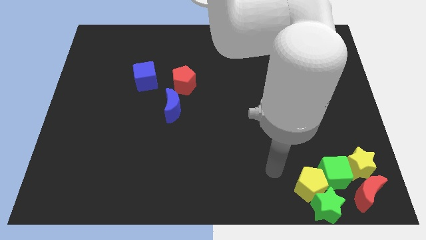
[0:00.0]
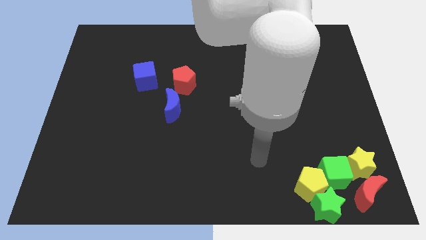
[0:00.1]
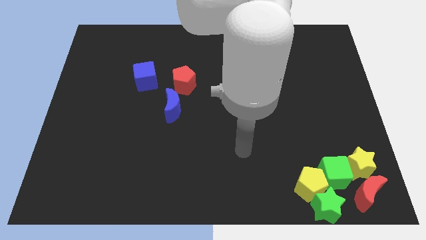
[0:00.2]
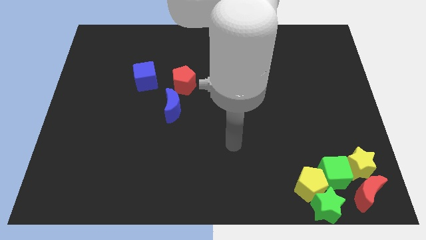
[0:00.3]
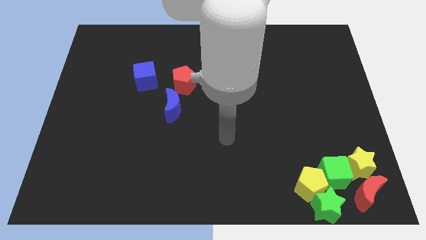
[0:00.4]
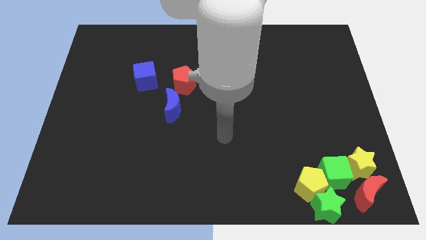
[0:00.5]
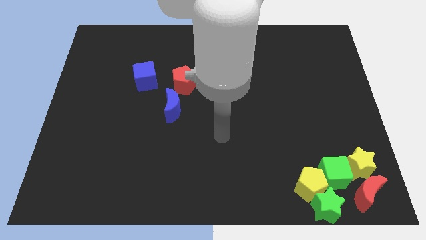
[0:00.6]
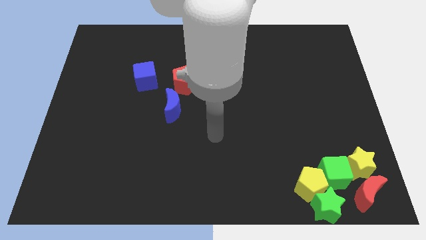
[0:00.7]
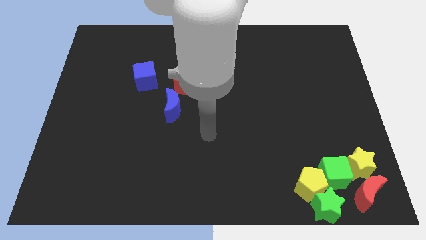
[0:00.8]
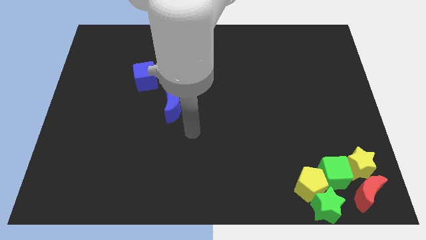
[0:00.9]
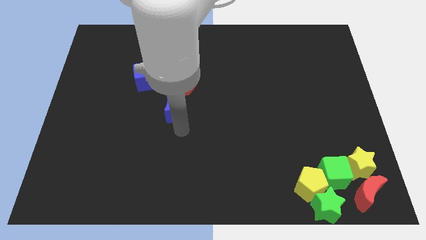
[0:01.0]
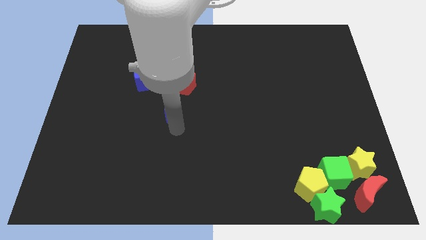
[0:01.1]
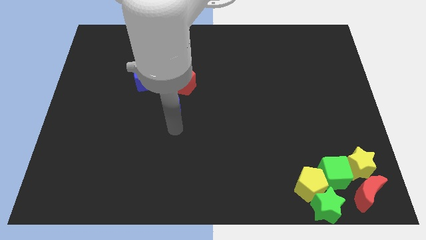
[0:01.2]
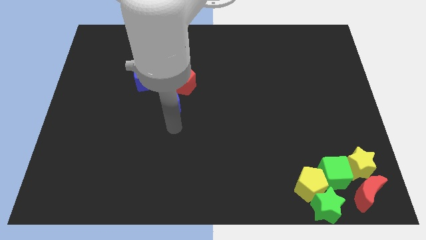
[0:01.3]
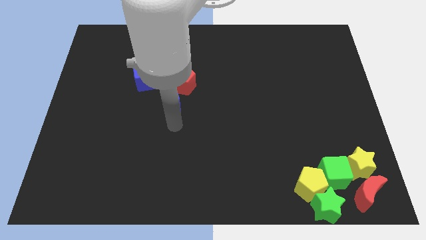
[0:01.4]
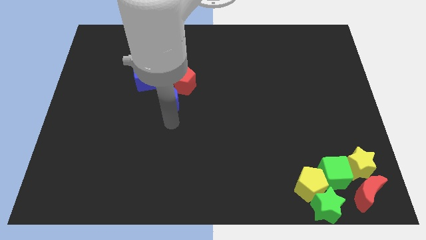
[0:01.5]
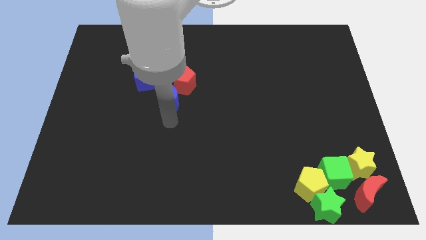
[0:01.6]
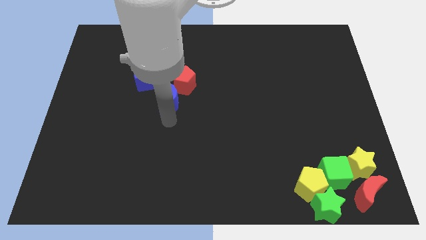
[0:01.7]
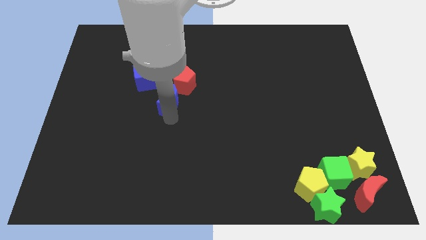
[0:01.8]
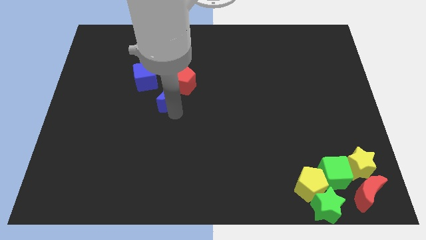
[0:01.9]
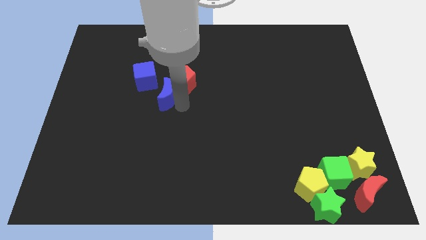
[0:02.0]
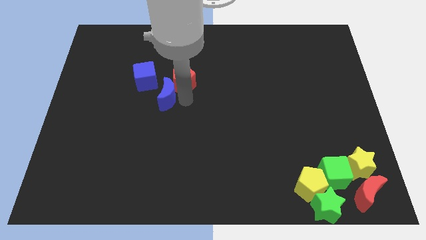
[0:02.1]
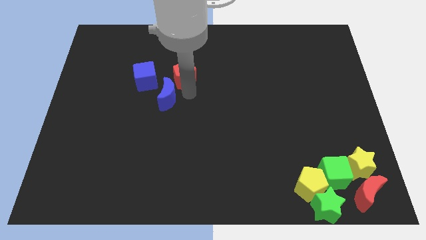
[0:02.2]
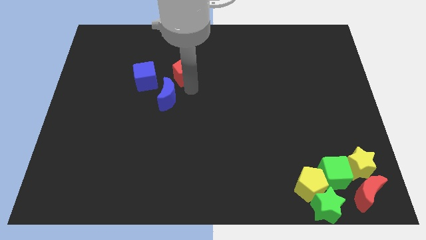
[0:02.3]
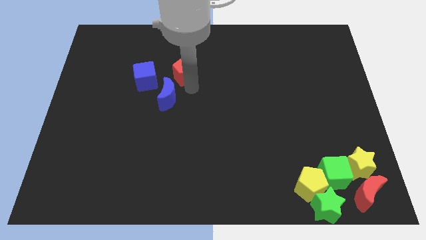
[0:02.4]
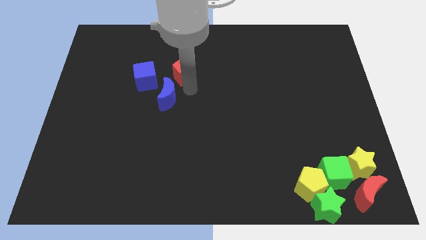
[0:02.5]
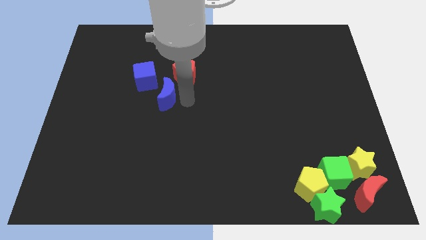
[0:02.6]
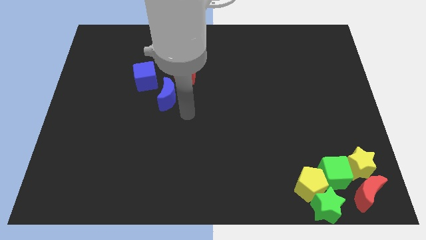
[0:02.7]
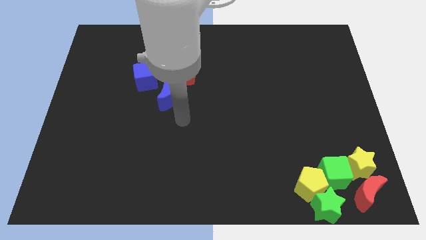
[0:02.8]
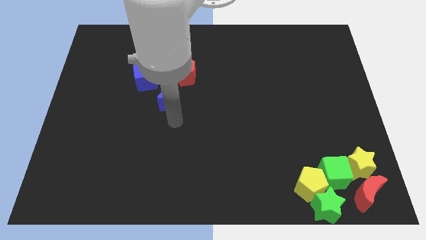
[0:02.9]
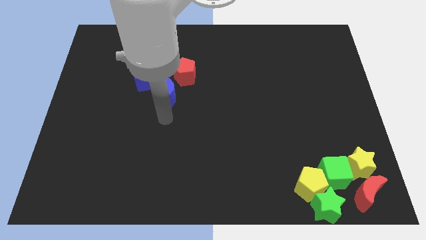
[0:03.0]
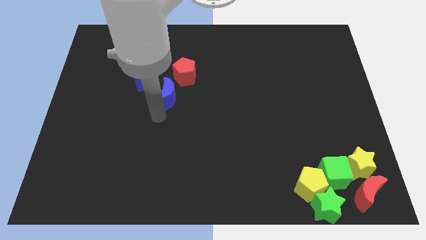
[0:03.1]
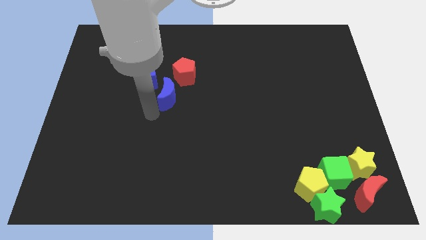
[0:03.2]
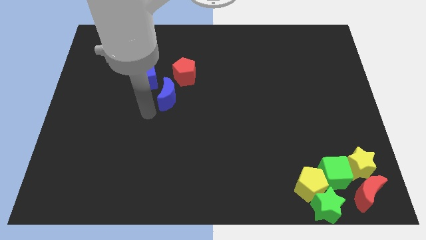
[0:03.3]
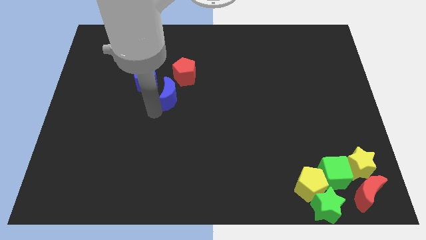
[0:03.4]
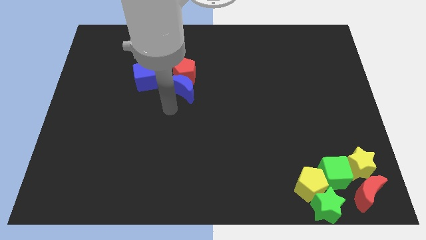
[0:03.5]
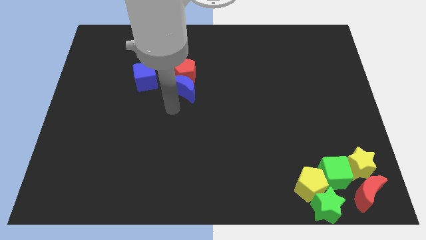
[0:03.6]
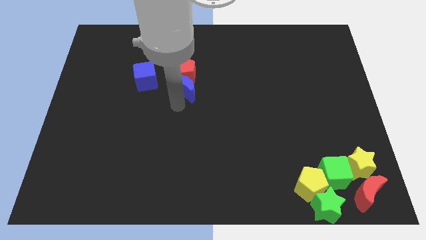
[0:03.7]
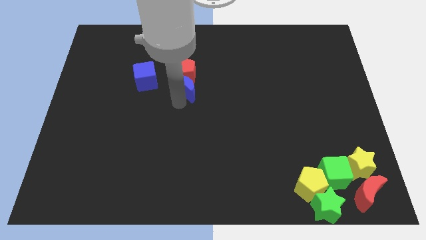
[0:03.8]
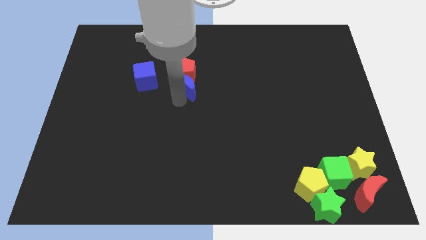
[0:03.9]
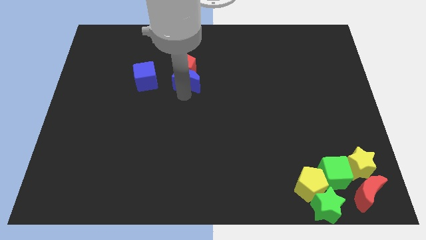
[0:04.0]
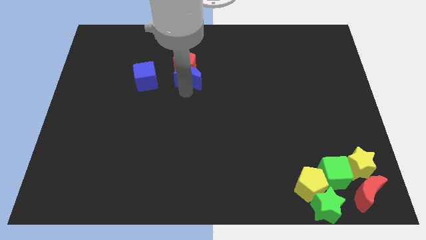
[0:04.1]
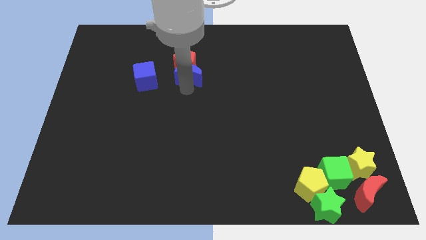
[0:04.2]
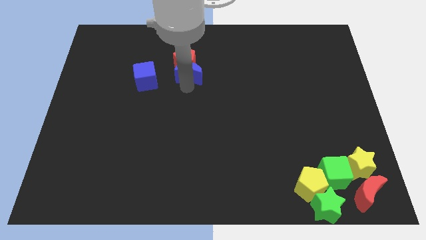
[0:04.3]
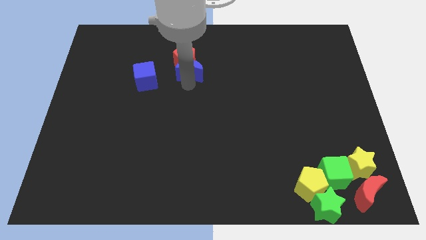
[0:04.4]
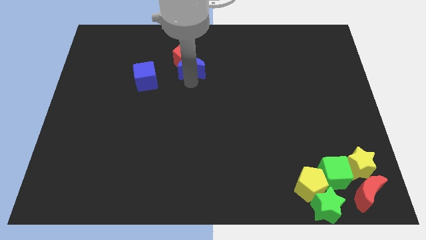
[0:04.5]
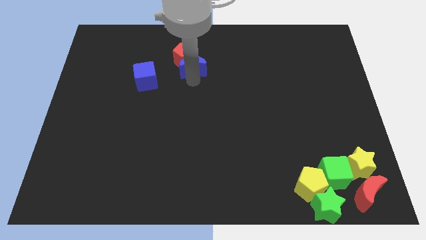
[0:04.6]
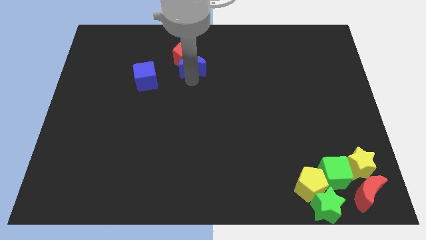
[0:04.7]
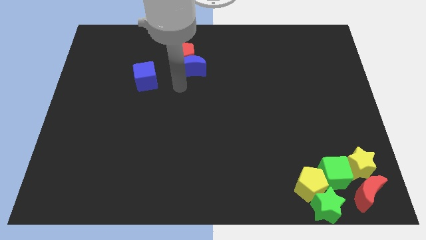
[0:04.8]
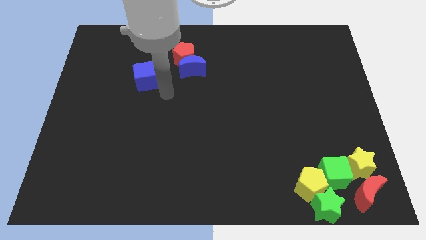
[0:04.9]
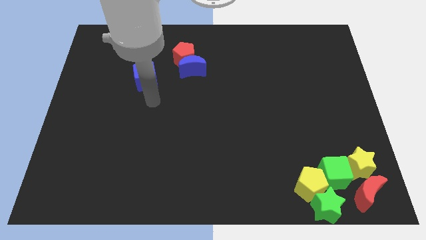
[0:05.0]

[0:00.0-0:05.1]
push the red pentagon and blue crescent towards the top center of the board

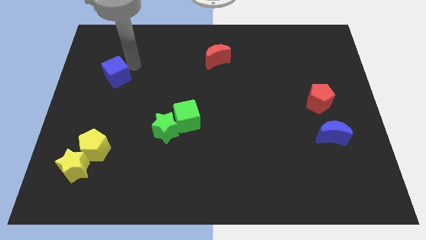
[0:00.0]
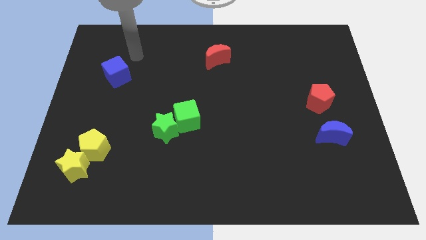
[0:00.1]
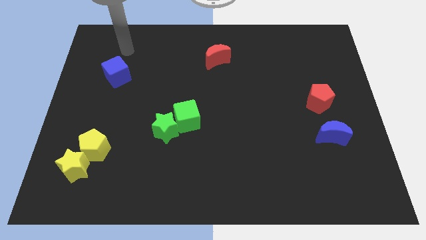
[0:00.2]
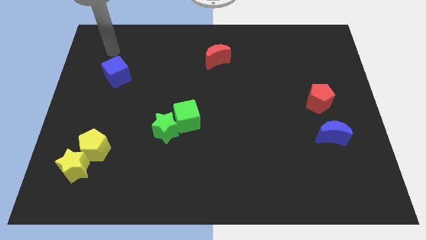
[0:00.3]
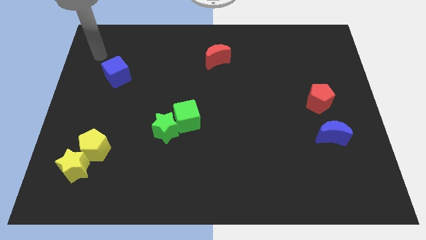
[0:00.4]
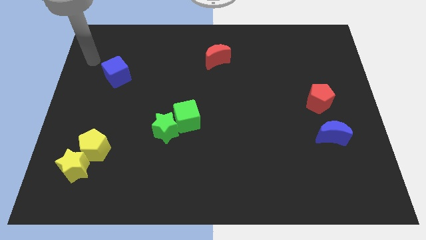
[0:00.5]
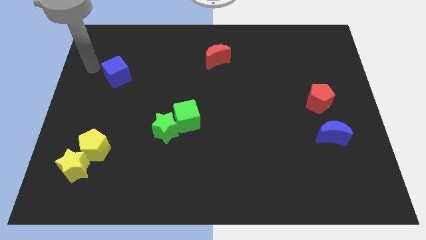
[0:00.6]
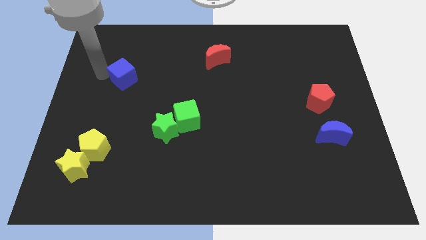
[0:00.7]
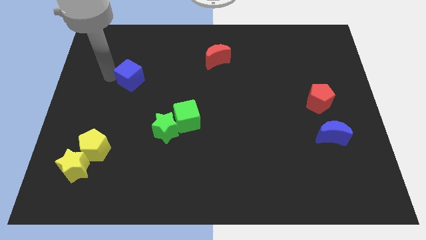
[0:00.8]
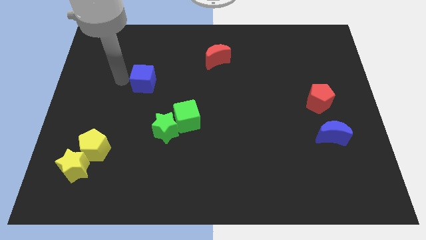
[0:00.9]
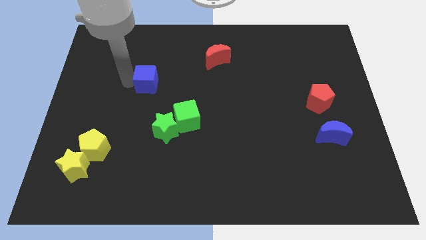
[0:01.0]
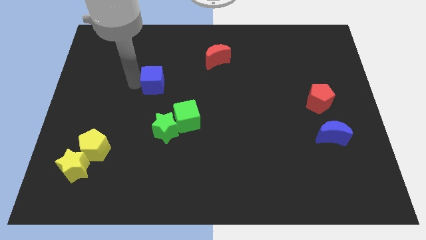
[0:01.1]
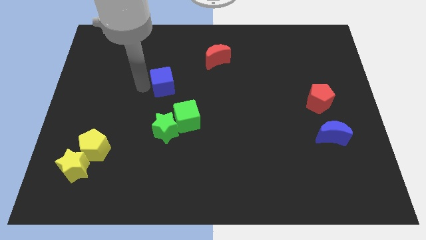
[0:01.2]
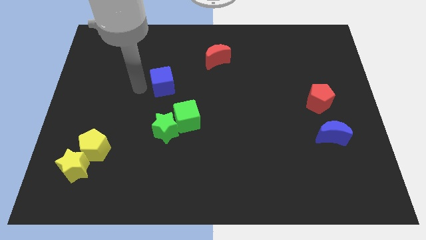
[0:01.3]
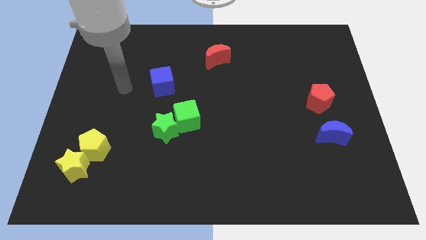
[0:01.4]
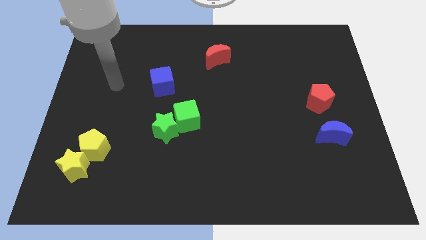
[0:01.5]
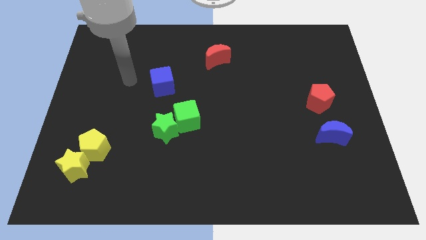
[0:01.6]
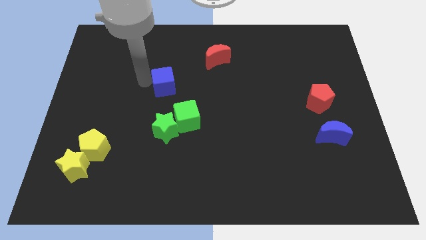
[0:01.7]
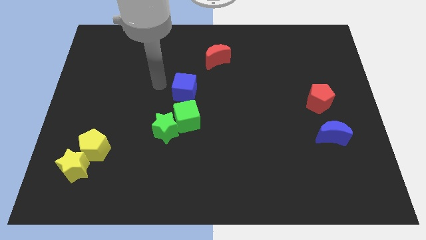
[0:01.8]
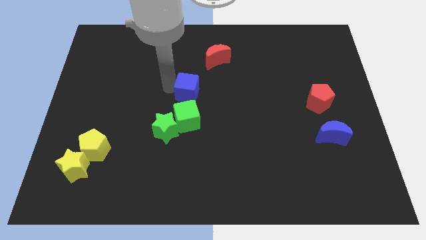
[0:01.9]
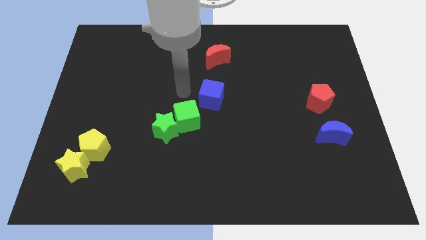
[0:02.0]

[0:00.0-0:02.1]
move blue cube towards center

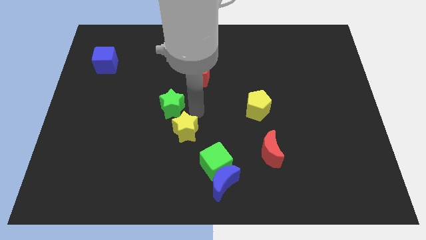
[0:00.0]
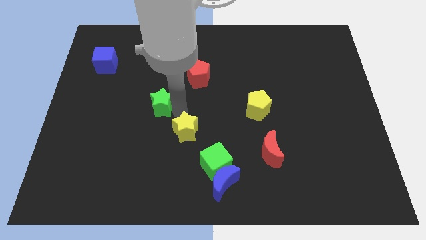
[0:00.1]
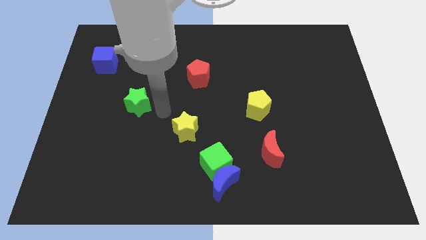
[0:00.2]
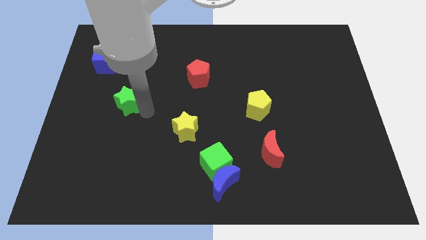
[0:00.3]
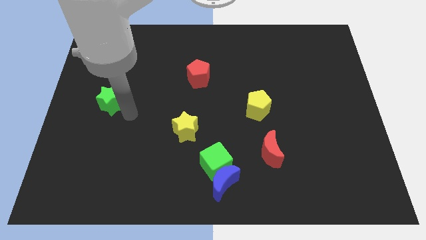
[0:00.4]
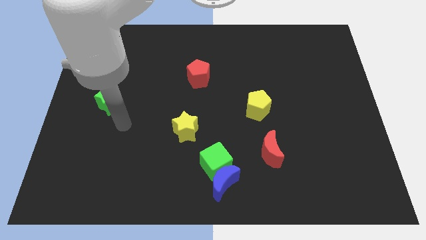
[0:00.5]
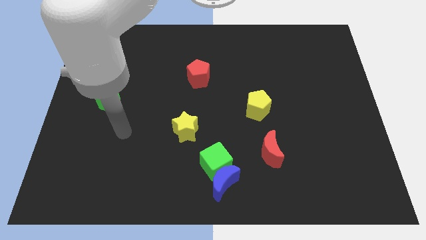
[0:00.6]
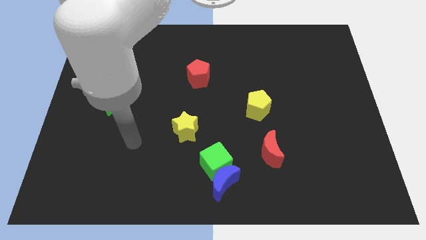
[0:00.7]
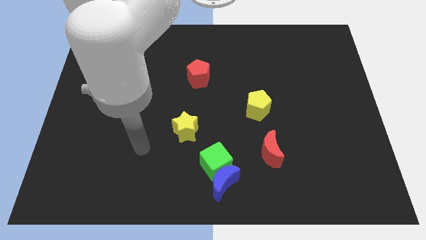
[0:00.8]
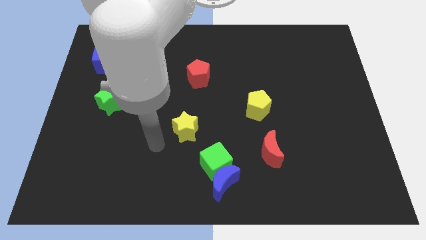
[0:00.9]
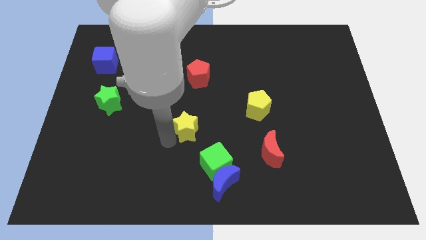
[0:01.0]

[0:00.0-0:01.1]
place your arm left to the yellow star

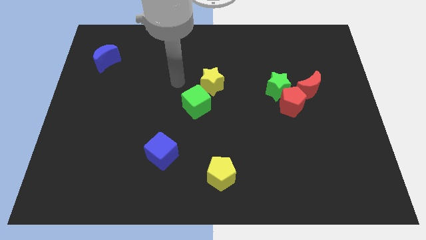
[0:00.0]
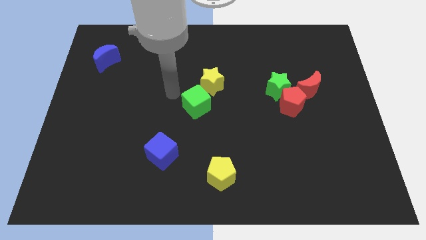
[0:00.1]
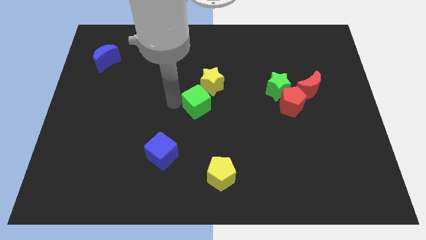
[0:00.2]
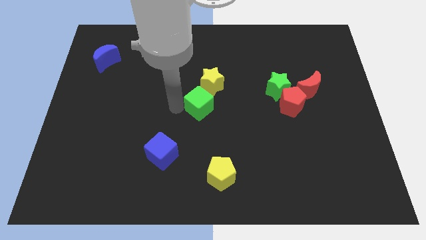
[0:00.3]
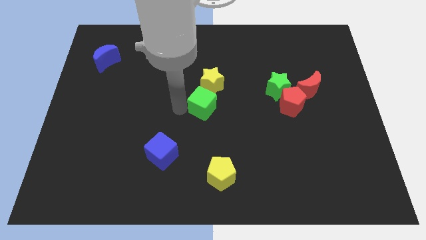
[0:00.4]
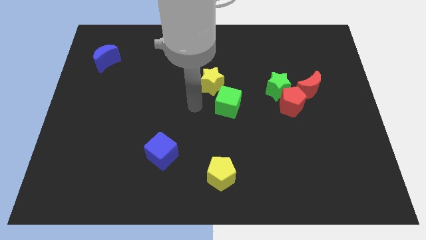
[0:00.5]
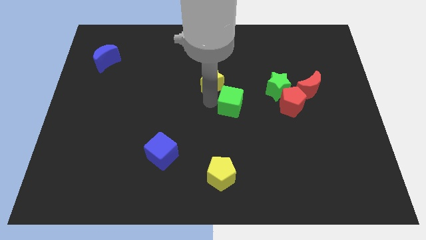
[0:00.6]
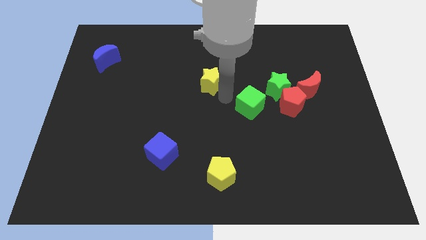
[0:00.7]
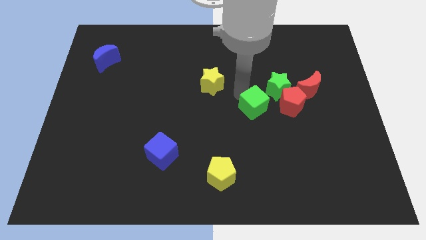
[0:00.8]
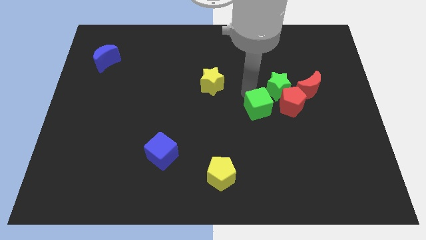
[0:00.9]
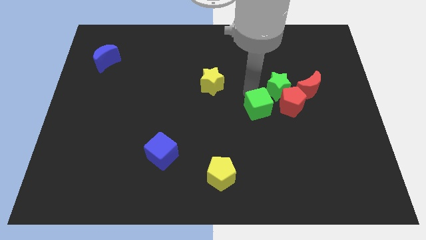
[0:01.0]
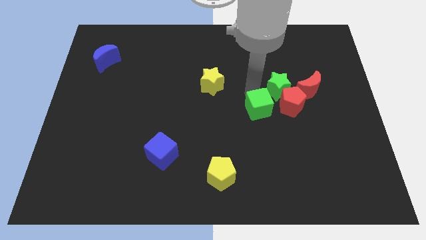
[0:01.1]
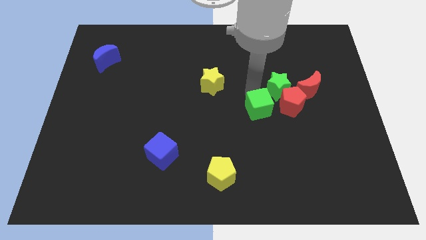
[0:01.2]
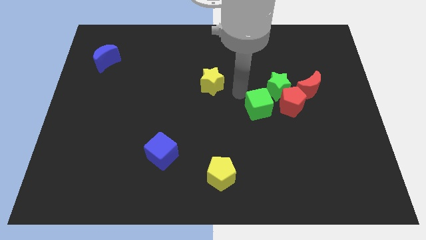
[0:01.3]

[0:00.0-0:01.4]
move the green cube close to the green star and red pentagon
